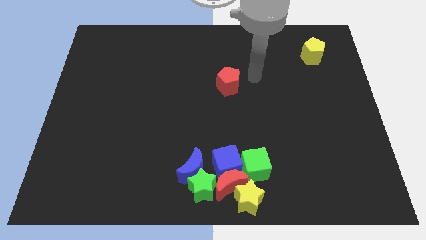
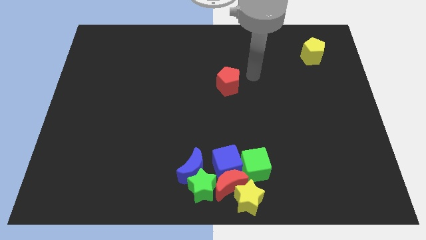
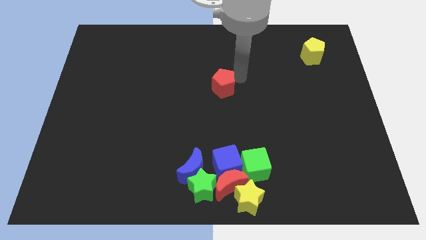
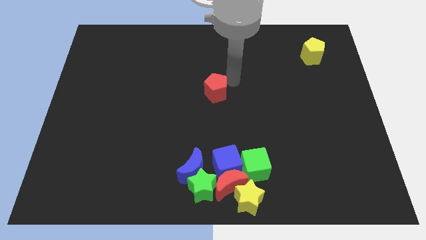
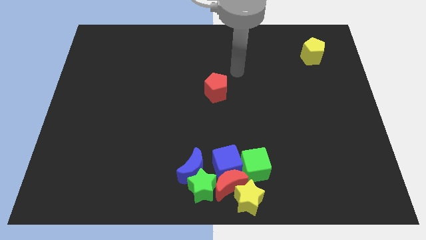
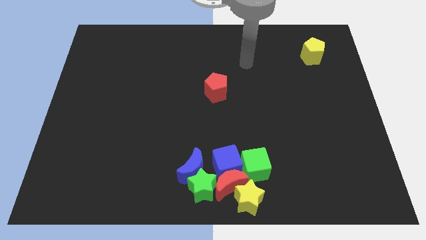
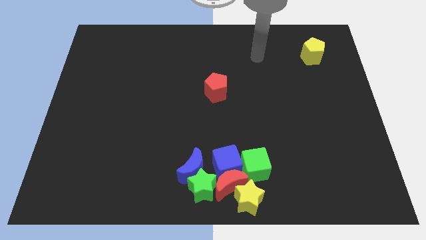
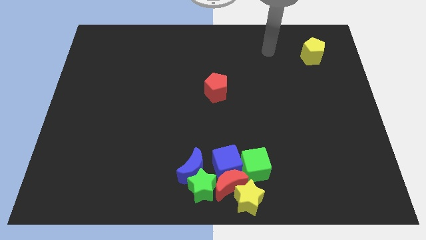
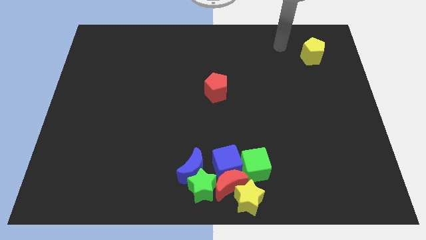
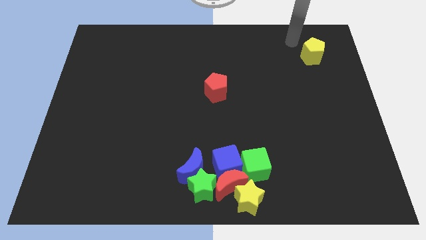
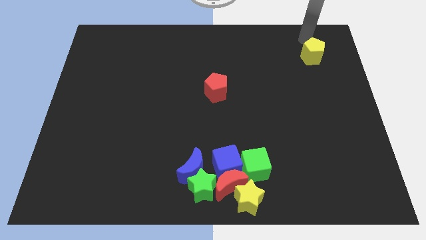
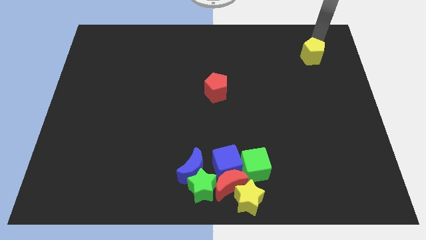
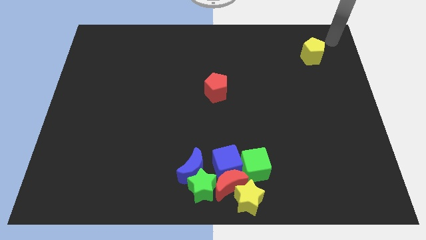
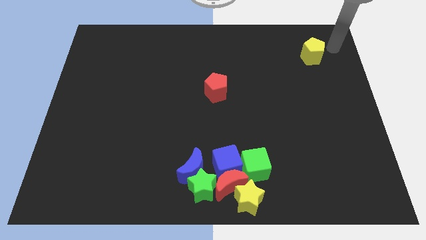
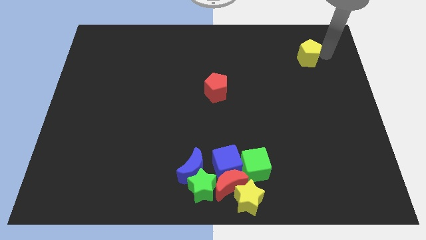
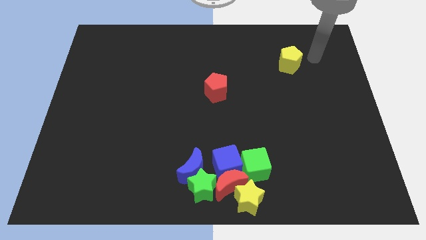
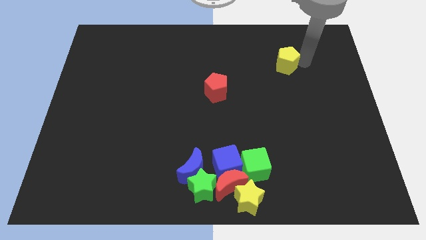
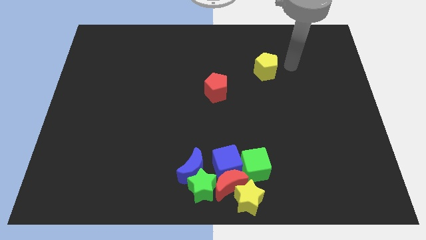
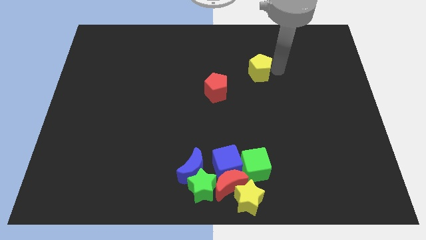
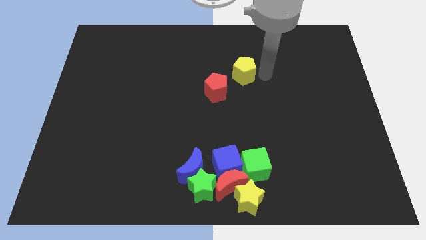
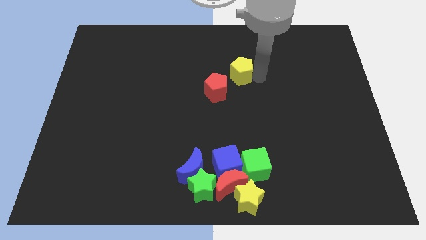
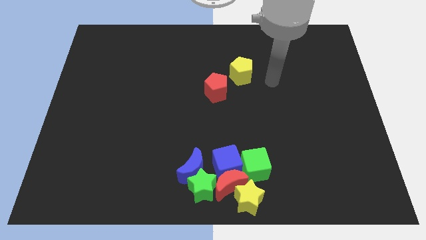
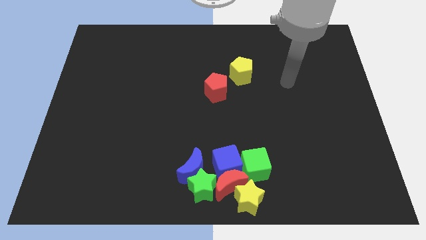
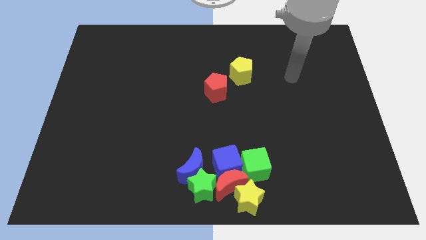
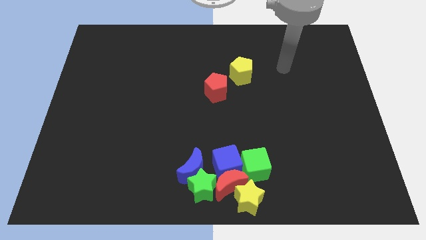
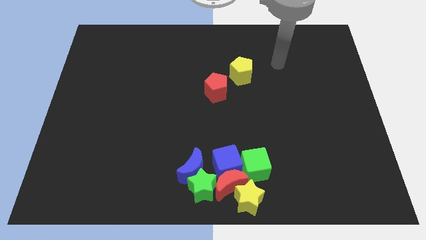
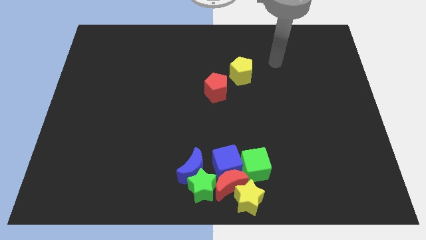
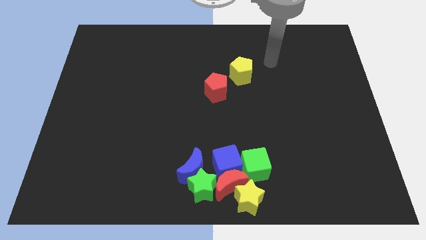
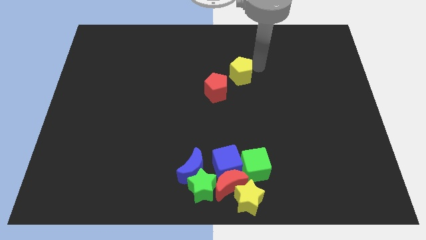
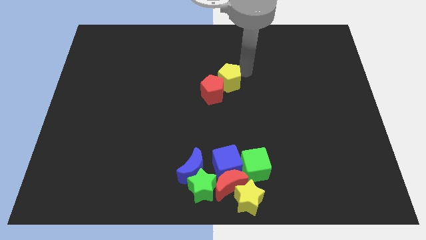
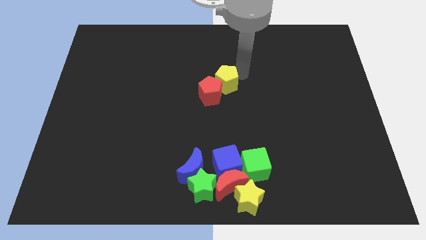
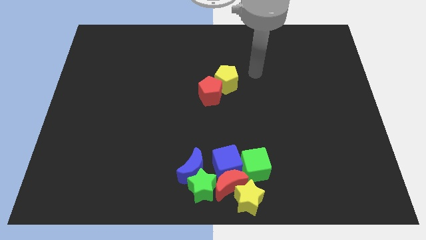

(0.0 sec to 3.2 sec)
move the yellow pentagon into the red pentagon

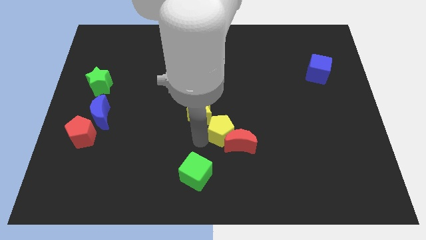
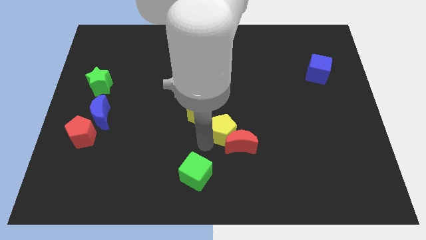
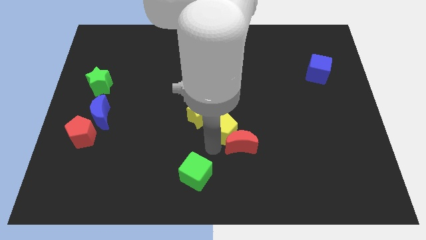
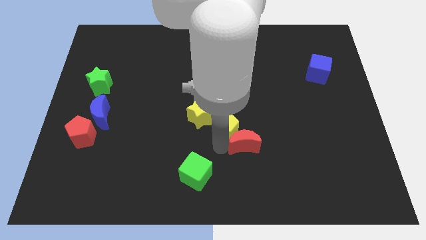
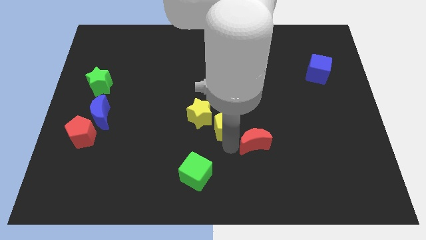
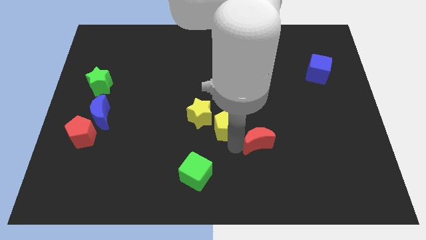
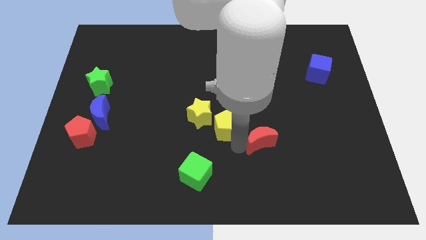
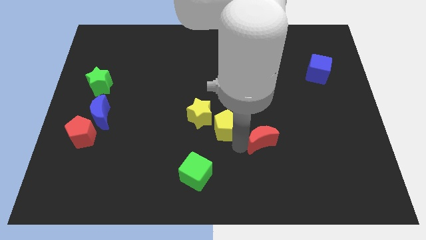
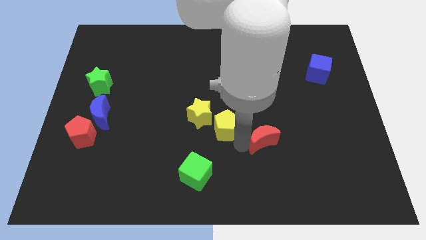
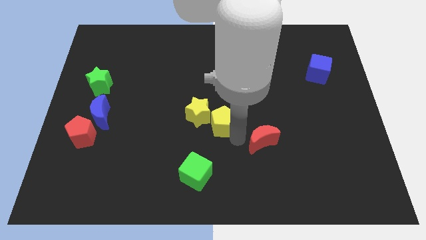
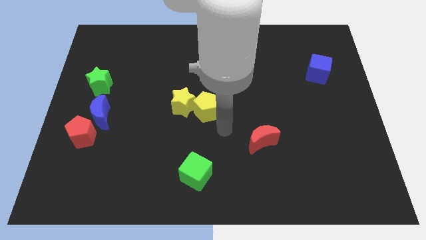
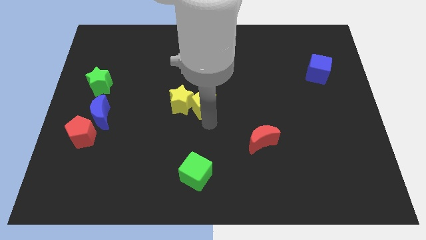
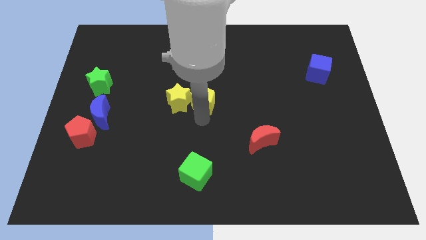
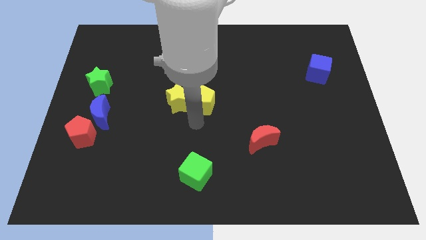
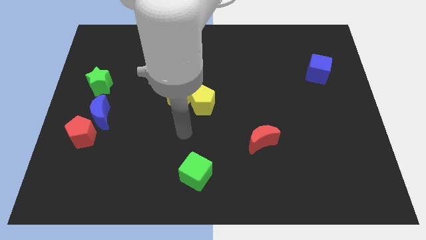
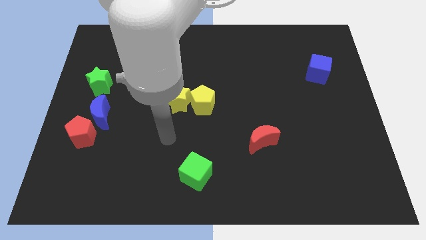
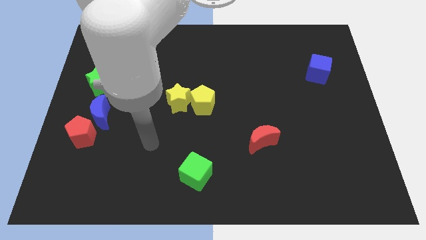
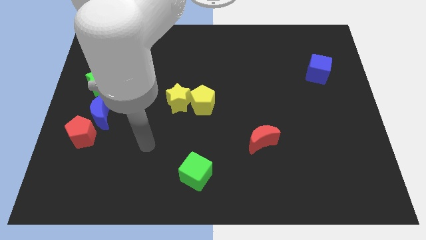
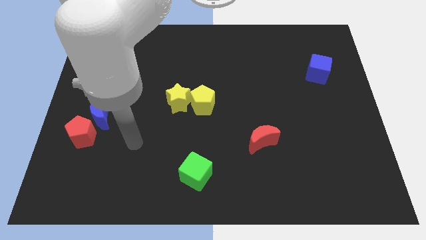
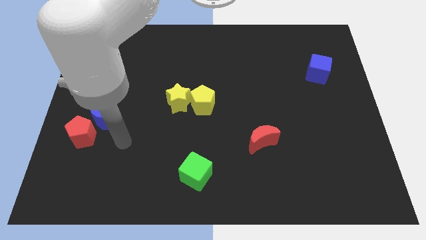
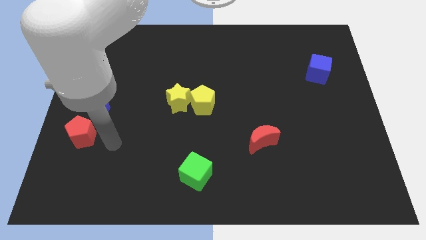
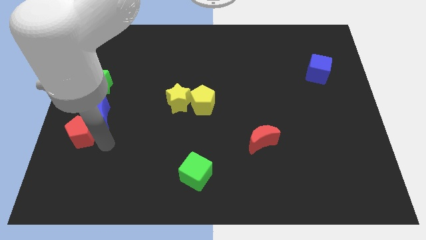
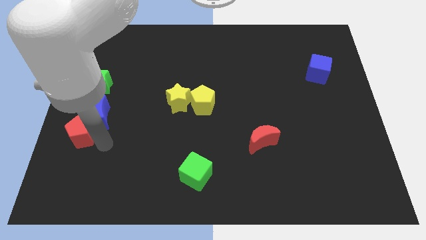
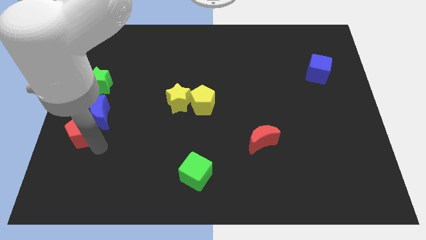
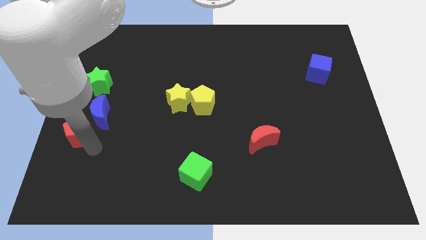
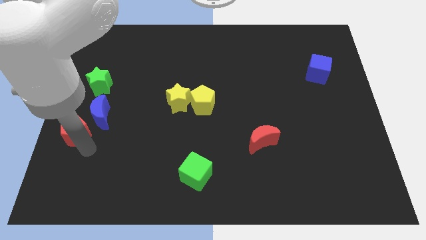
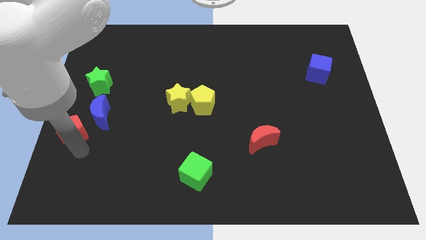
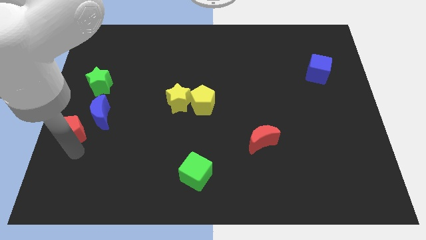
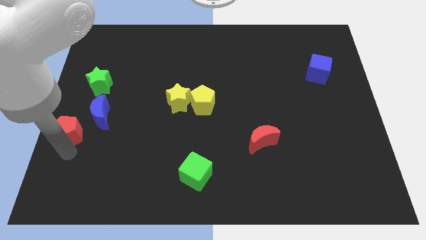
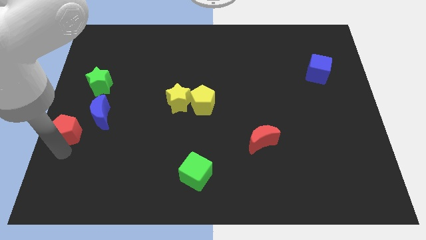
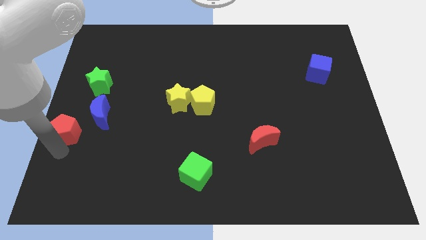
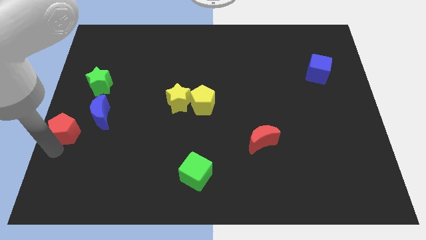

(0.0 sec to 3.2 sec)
separate the red moon from the yellow blocks

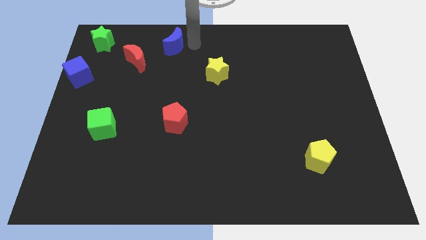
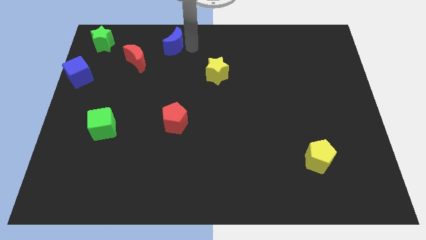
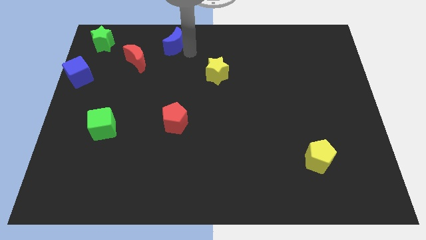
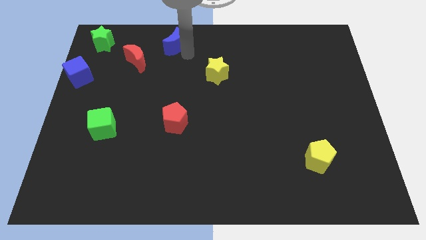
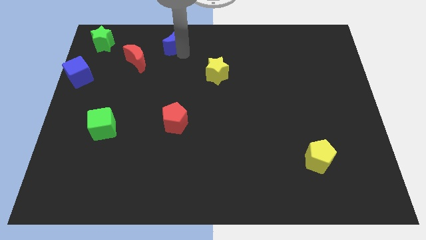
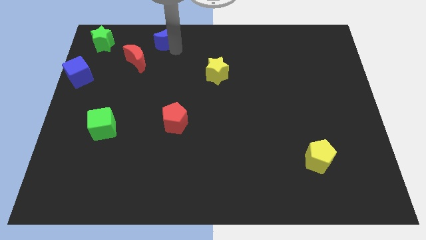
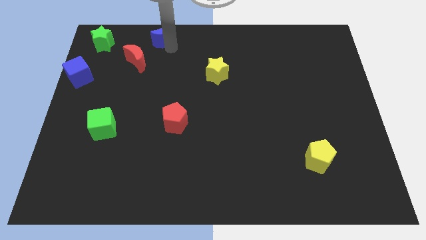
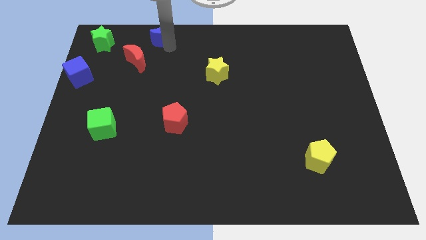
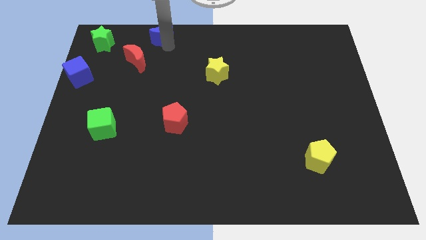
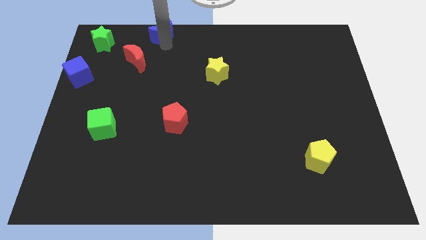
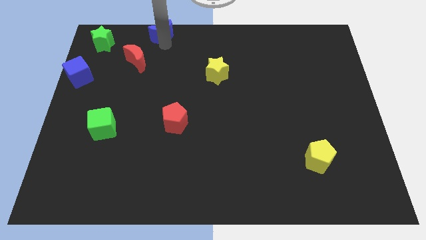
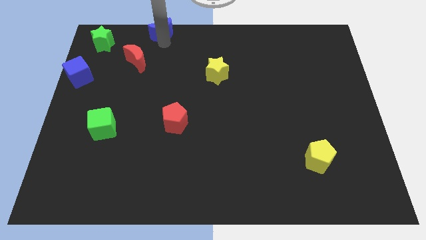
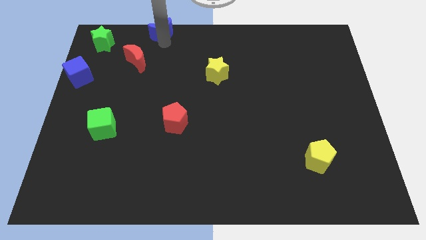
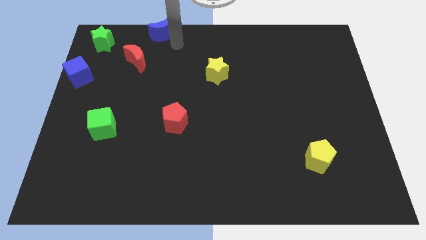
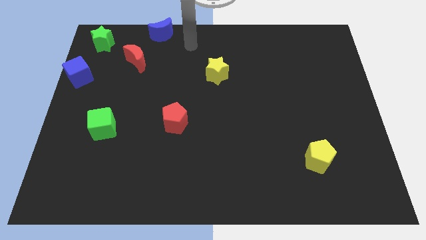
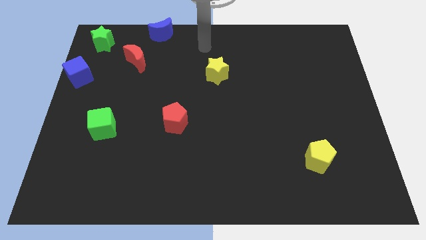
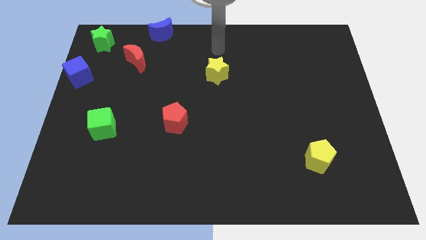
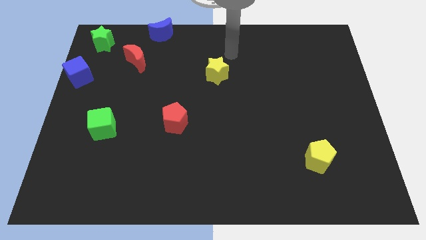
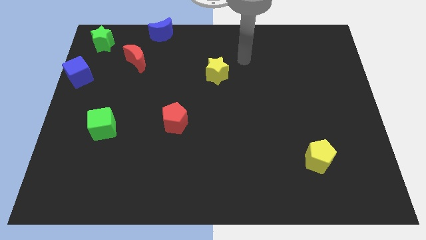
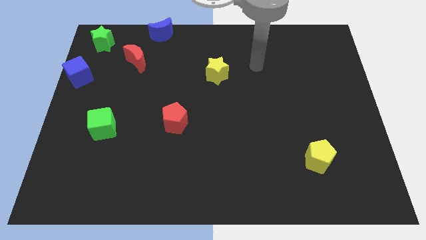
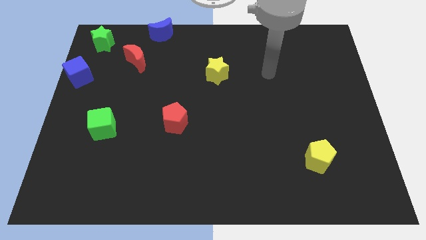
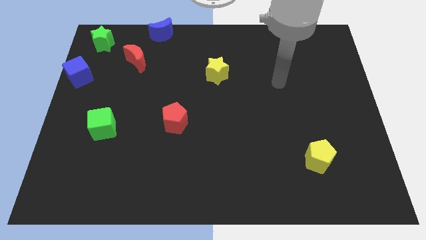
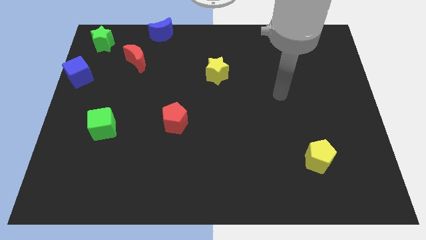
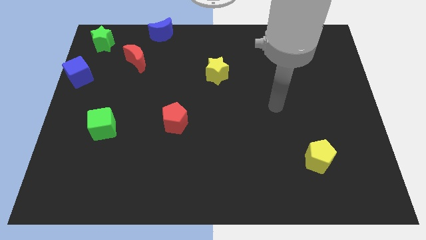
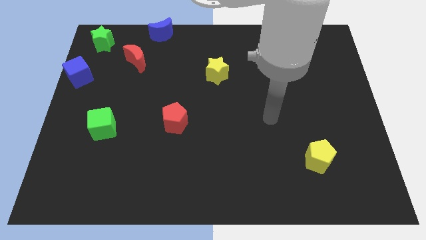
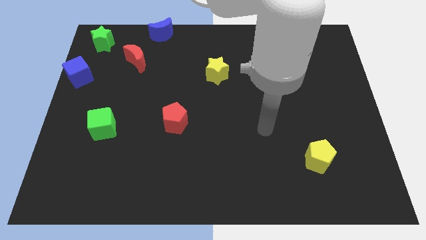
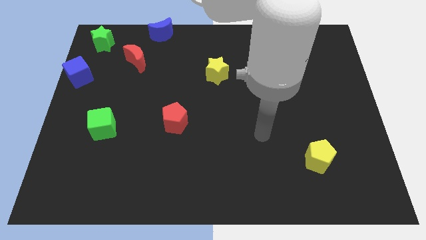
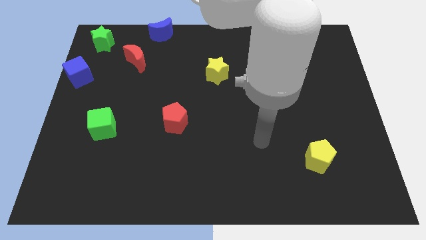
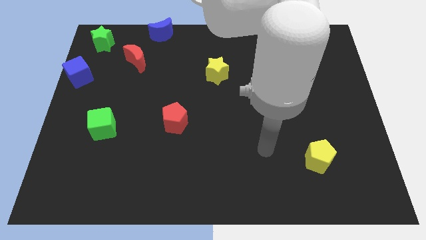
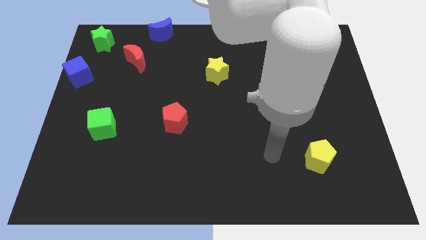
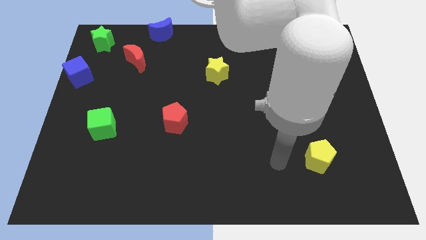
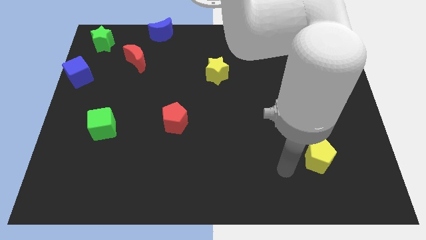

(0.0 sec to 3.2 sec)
place your arm to the left of yellow pentagon
